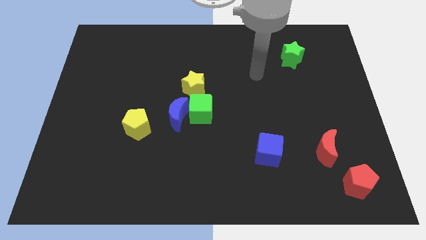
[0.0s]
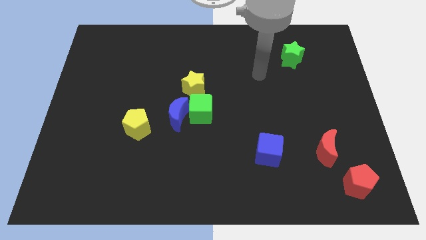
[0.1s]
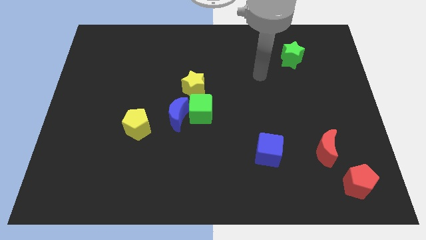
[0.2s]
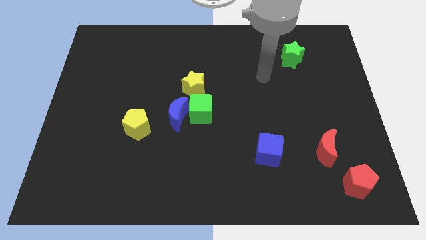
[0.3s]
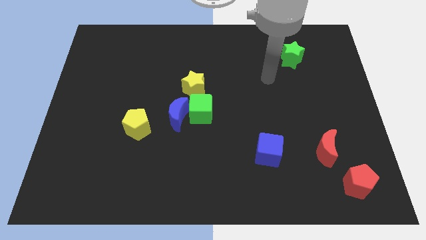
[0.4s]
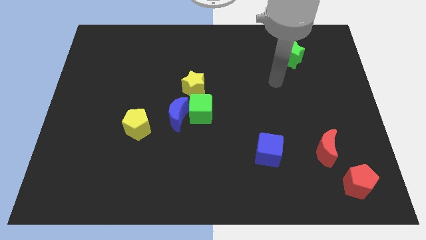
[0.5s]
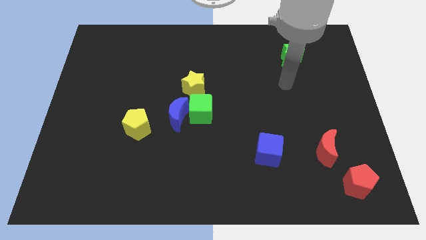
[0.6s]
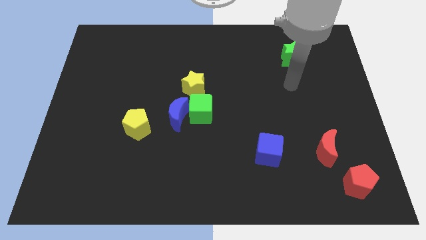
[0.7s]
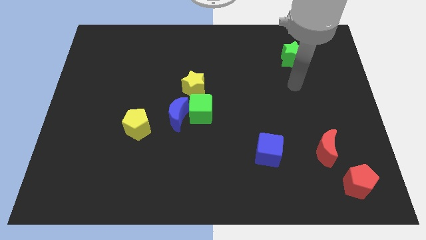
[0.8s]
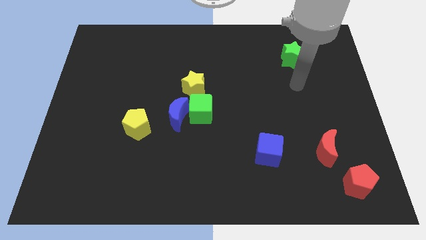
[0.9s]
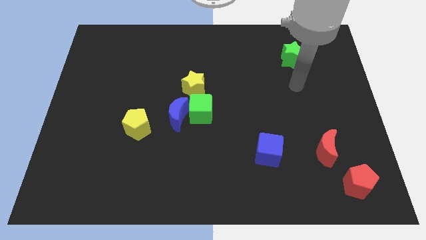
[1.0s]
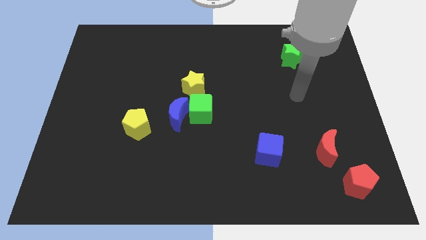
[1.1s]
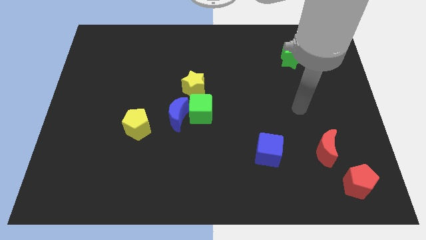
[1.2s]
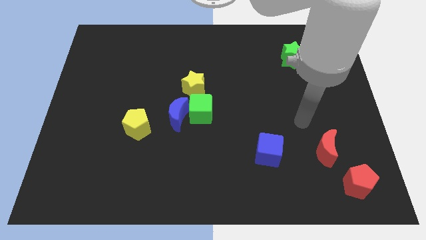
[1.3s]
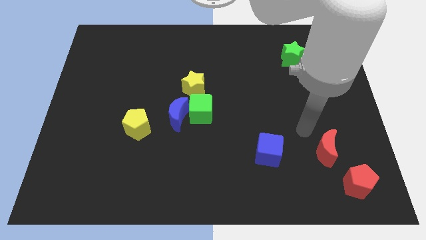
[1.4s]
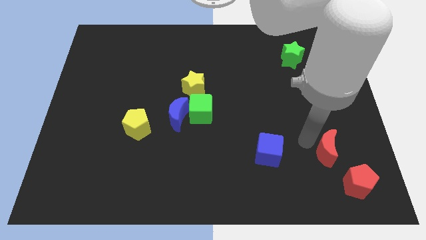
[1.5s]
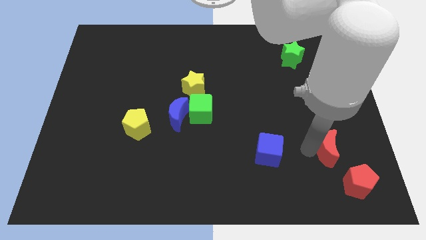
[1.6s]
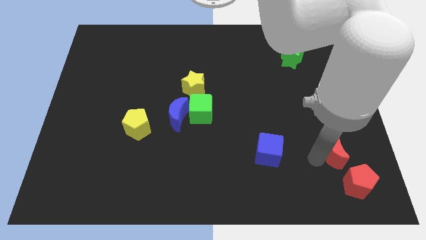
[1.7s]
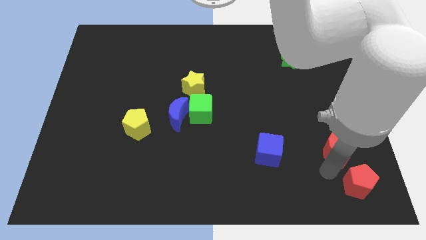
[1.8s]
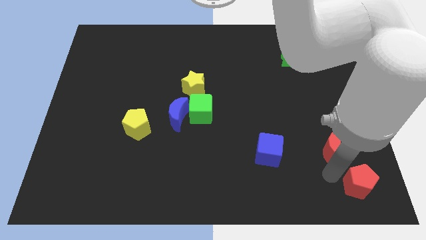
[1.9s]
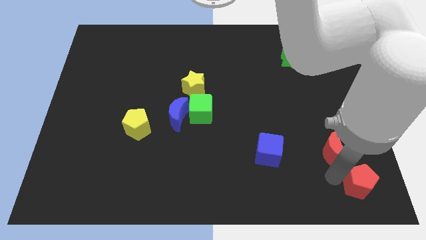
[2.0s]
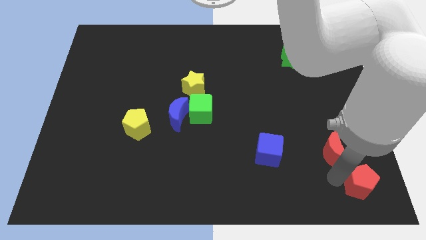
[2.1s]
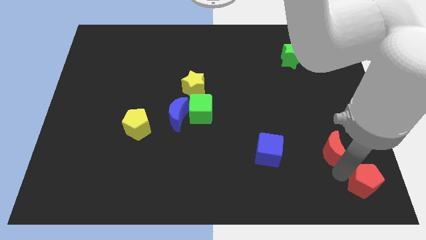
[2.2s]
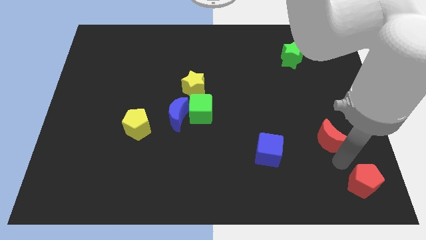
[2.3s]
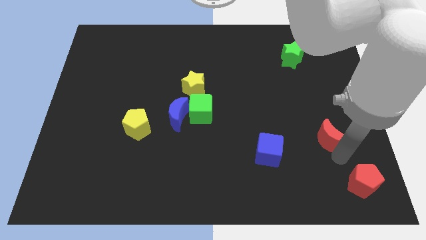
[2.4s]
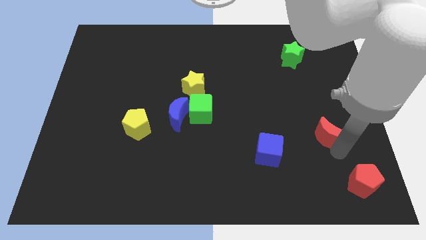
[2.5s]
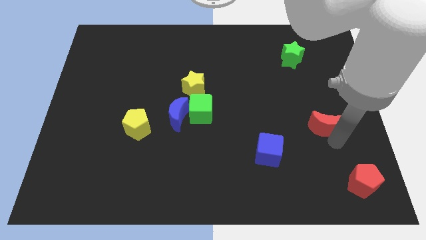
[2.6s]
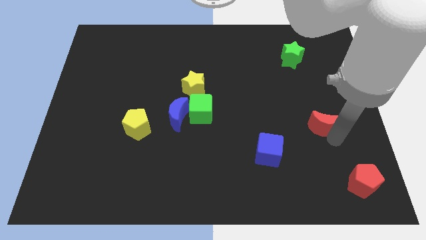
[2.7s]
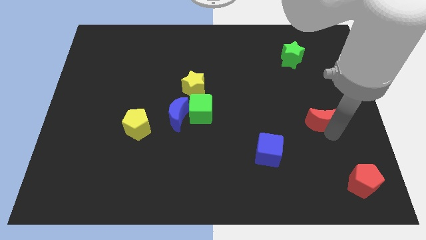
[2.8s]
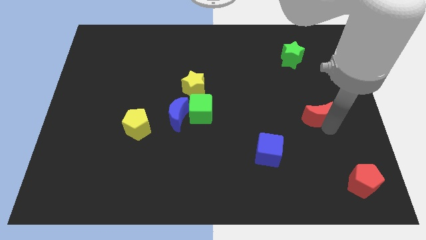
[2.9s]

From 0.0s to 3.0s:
move the red moon away from the red pentagon

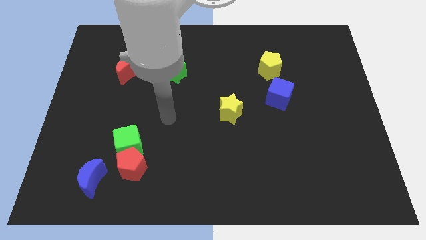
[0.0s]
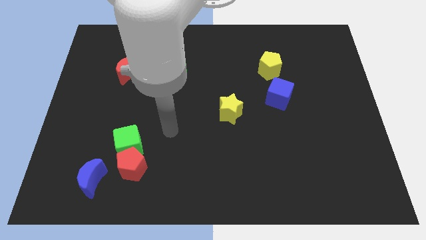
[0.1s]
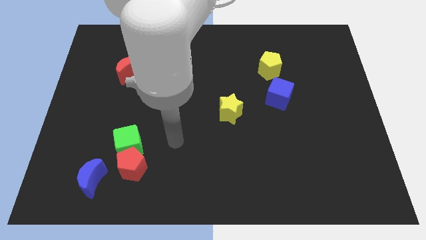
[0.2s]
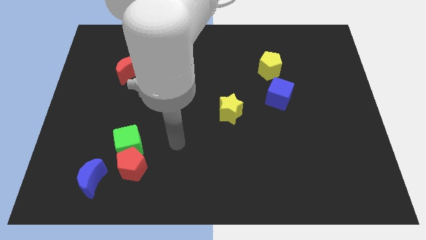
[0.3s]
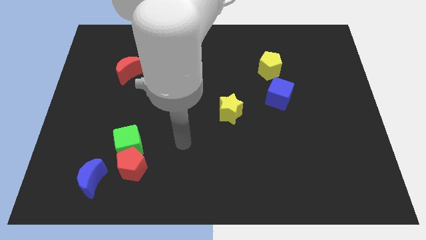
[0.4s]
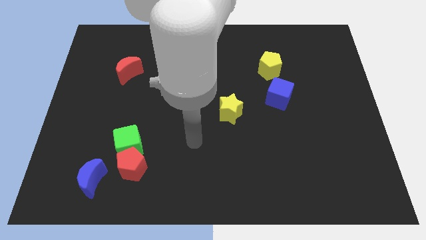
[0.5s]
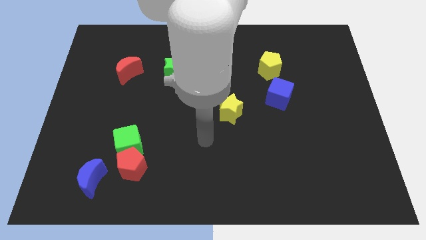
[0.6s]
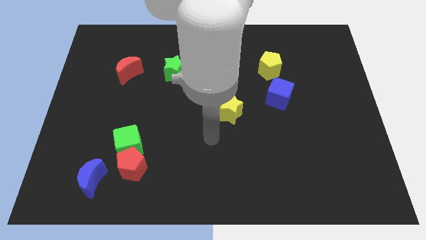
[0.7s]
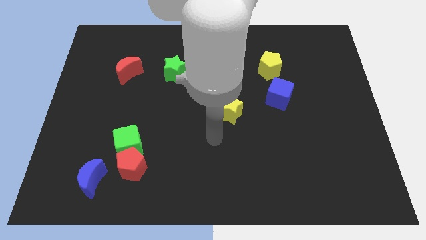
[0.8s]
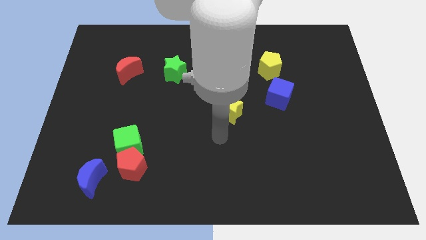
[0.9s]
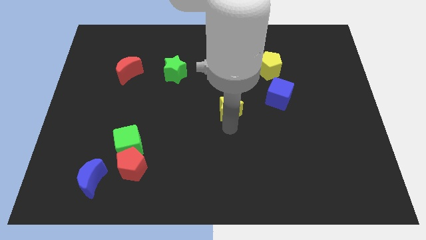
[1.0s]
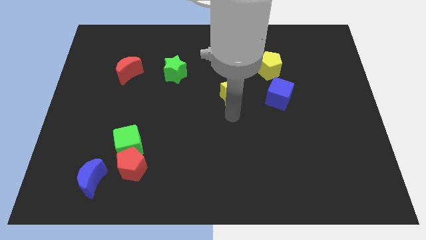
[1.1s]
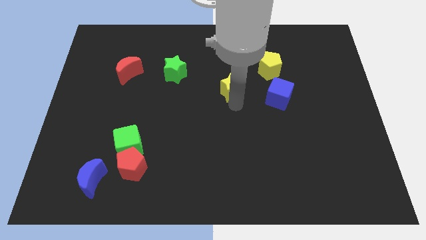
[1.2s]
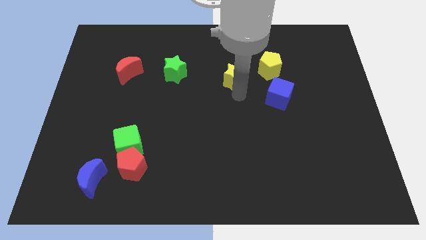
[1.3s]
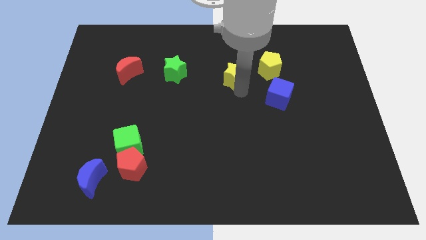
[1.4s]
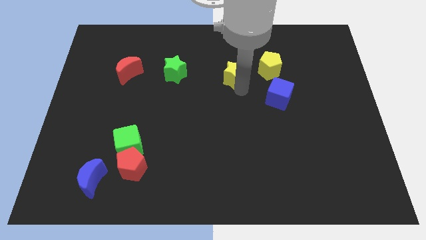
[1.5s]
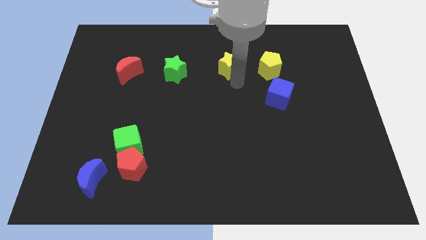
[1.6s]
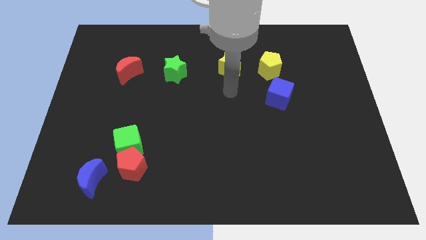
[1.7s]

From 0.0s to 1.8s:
move the yellow star towards the left side of the yellow pentagon

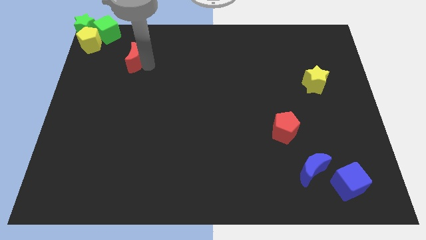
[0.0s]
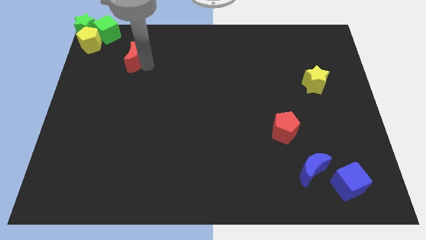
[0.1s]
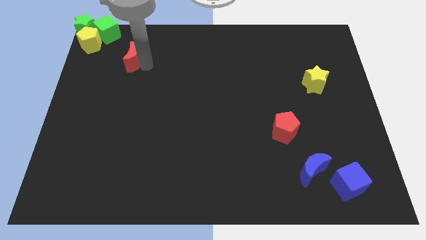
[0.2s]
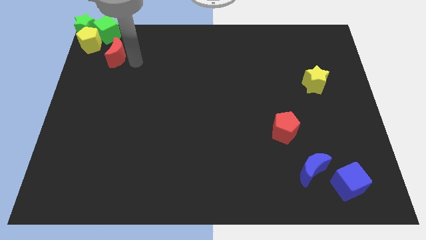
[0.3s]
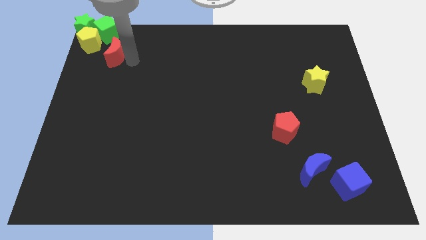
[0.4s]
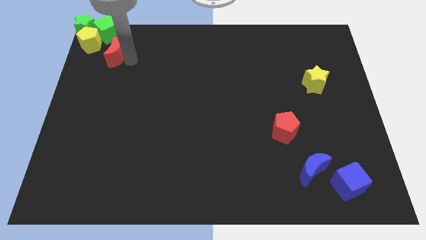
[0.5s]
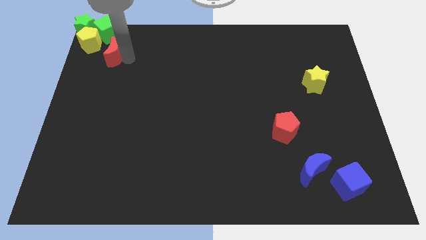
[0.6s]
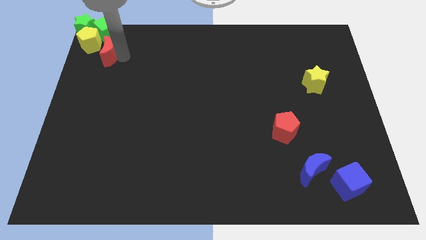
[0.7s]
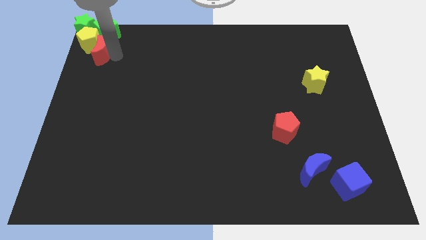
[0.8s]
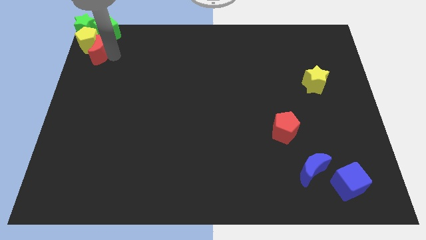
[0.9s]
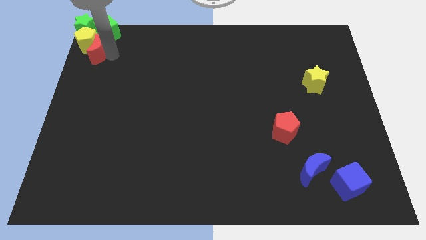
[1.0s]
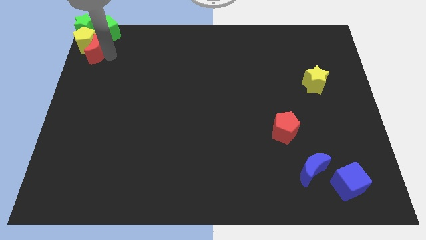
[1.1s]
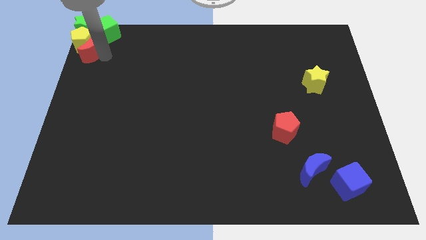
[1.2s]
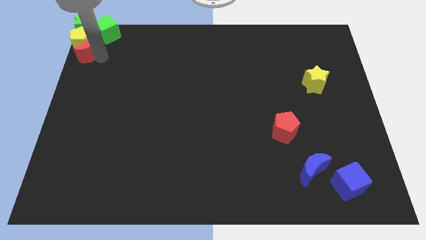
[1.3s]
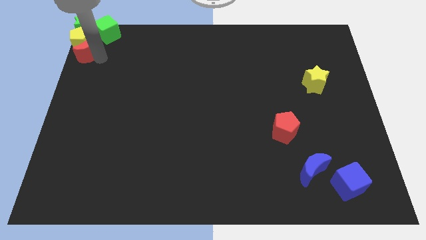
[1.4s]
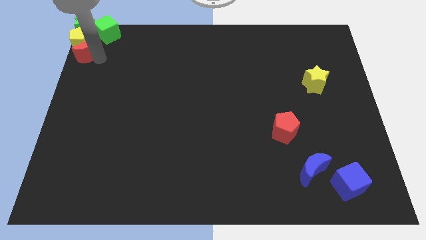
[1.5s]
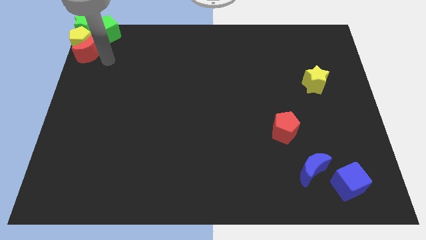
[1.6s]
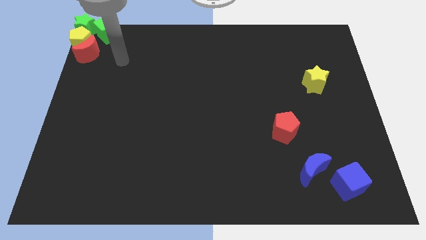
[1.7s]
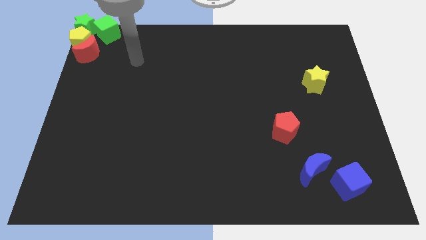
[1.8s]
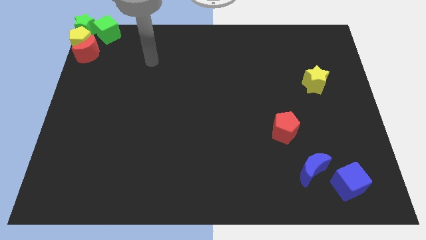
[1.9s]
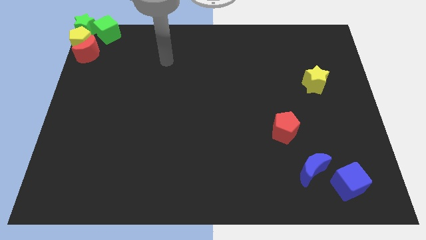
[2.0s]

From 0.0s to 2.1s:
move the red moon into the yellow pentagon

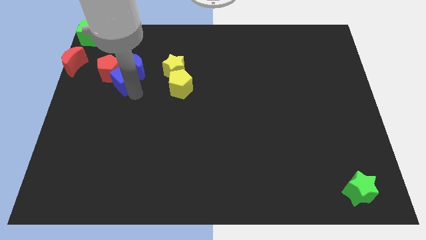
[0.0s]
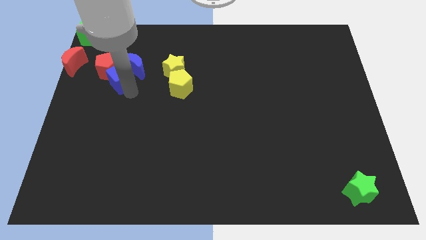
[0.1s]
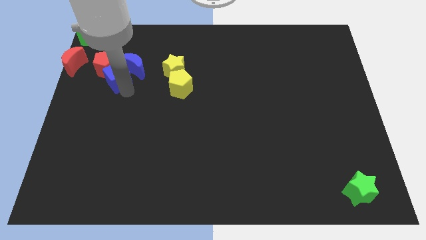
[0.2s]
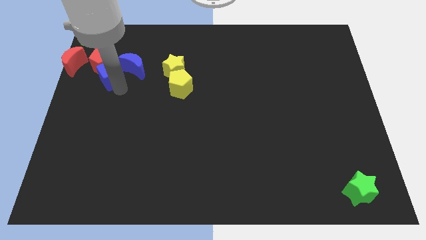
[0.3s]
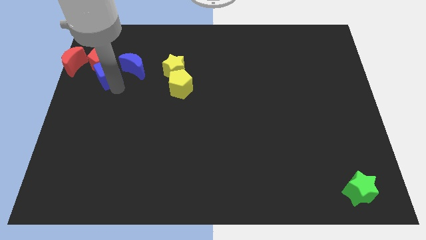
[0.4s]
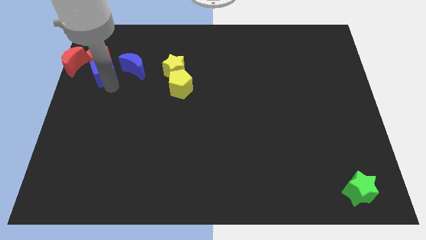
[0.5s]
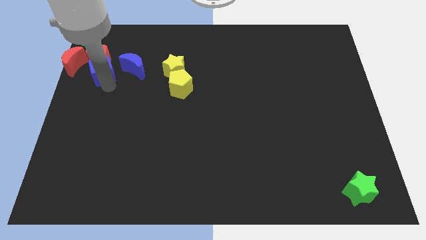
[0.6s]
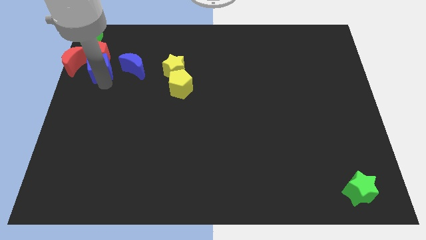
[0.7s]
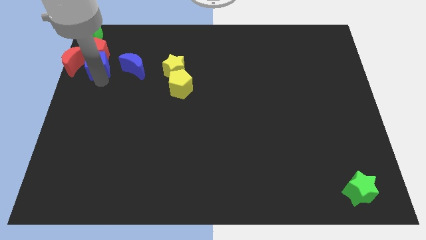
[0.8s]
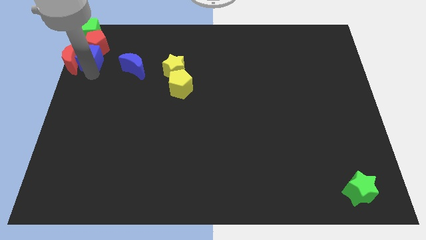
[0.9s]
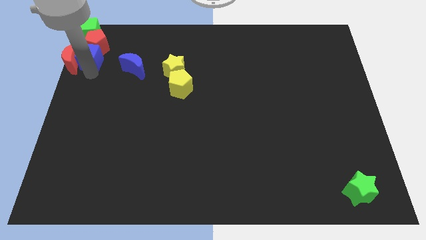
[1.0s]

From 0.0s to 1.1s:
place the blue cube right to the red moon

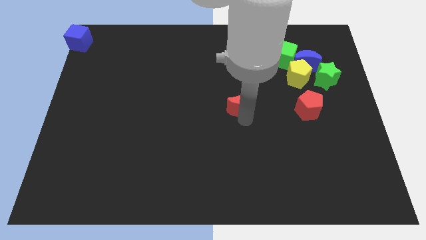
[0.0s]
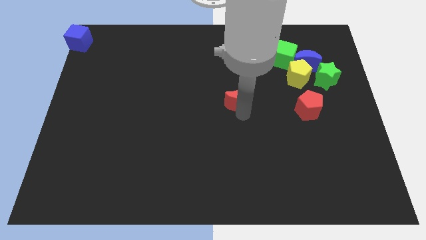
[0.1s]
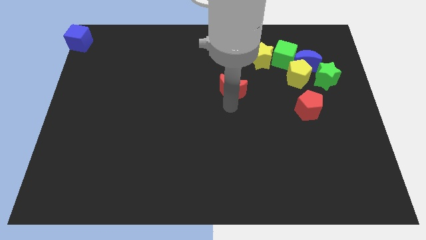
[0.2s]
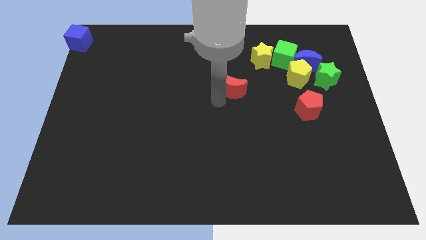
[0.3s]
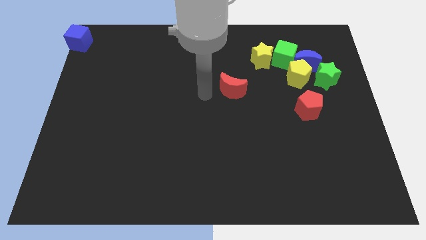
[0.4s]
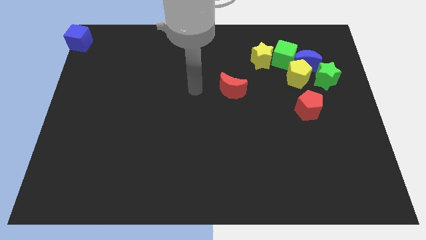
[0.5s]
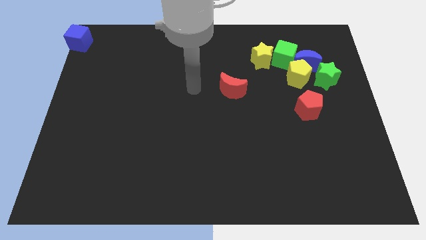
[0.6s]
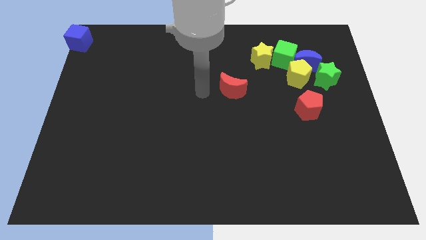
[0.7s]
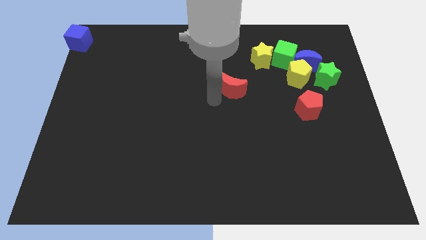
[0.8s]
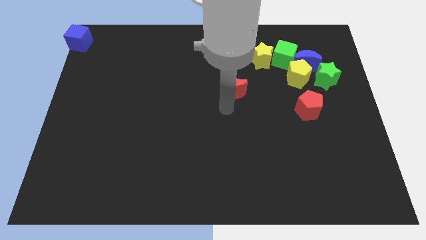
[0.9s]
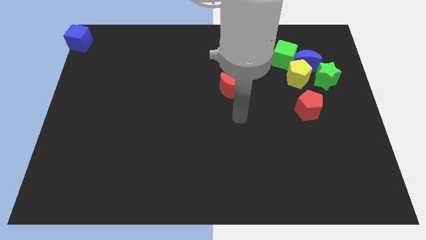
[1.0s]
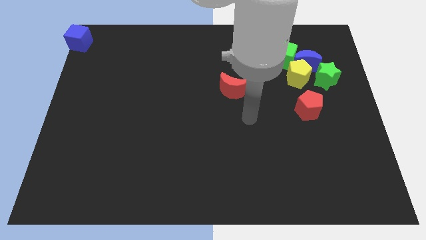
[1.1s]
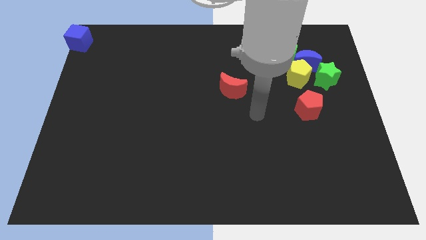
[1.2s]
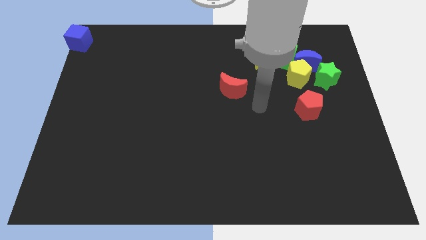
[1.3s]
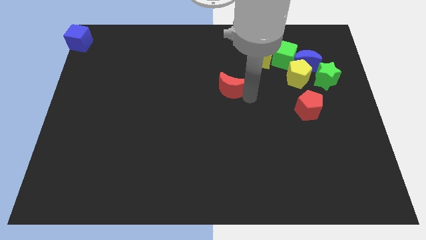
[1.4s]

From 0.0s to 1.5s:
push the red moon slightly to the top of the board
